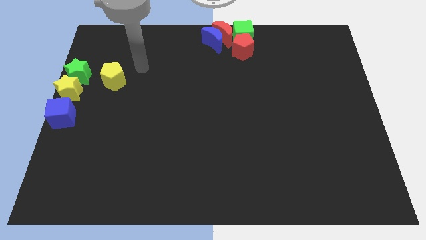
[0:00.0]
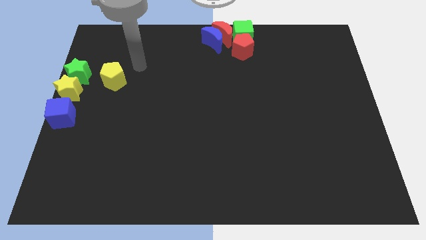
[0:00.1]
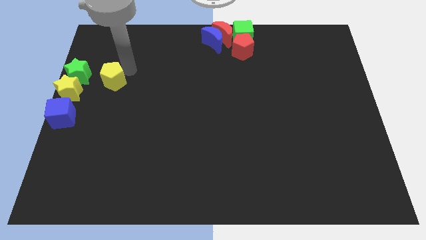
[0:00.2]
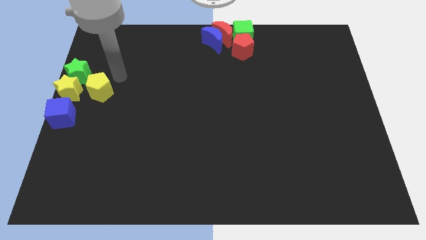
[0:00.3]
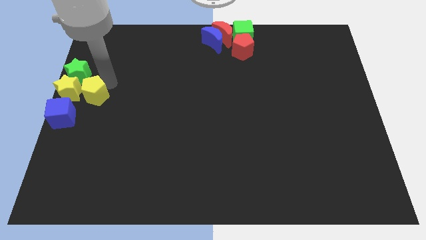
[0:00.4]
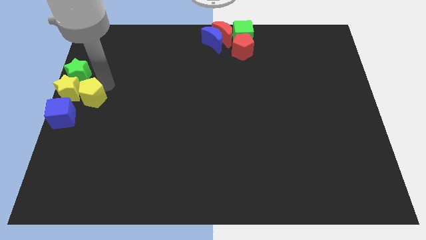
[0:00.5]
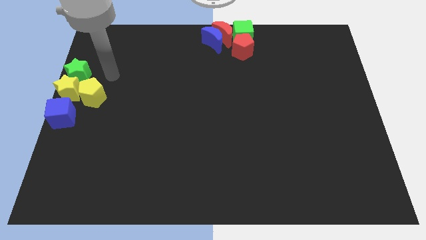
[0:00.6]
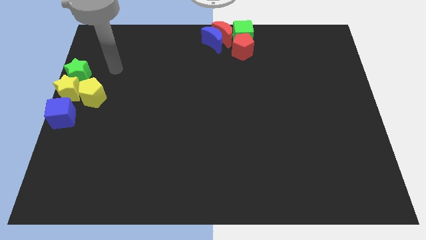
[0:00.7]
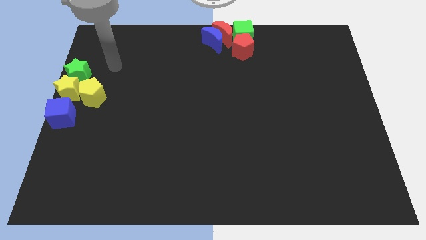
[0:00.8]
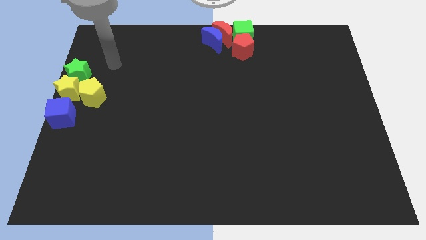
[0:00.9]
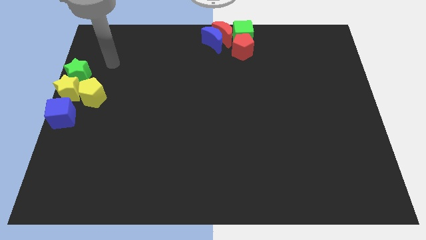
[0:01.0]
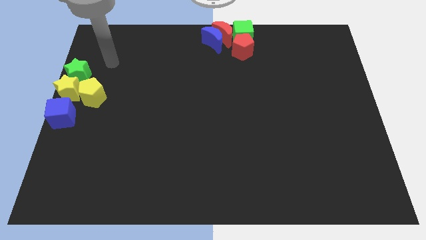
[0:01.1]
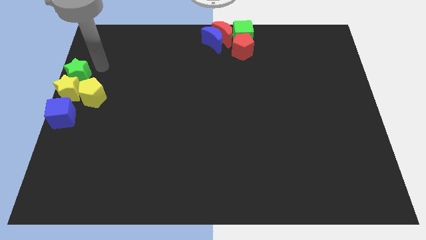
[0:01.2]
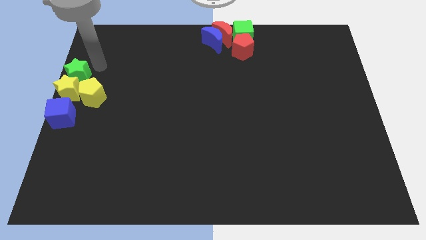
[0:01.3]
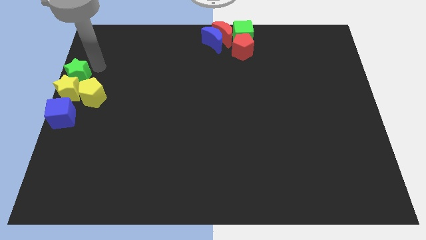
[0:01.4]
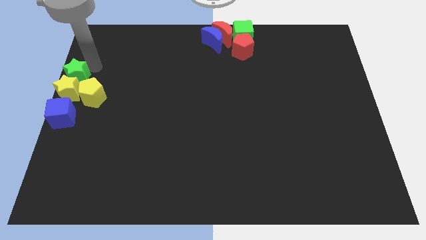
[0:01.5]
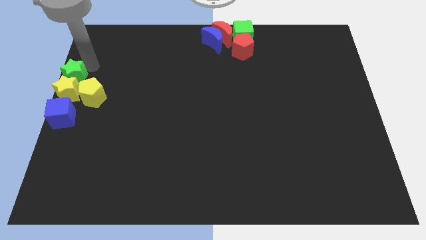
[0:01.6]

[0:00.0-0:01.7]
move the yellow pentagon right to the yellow star

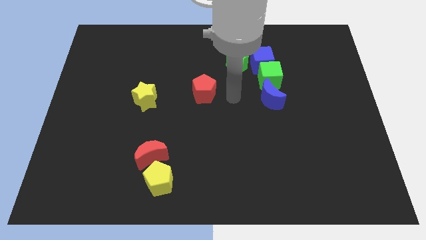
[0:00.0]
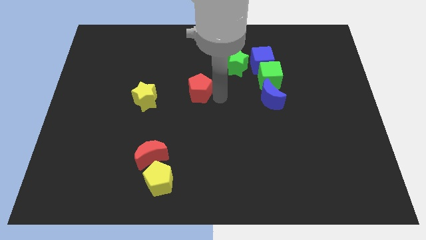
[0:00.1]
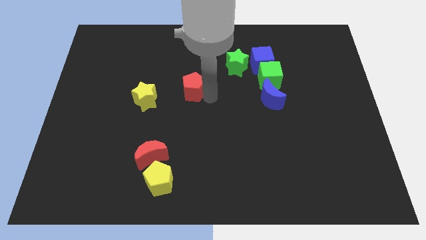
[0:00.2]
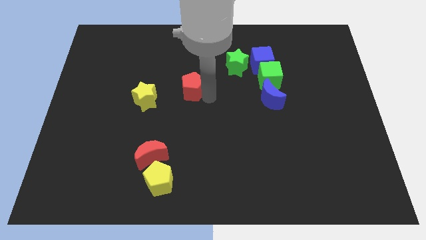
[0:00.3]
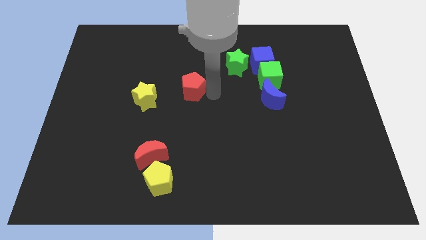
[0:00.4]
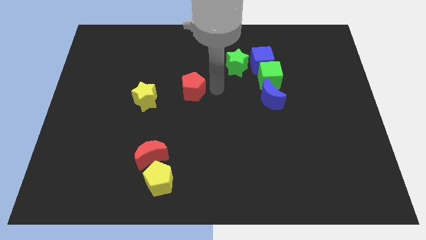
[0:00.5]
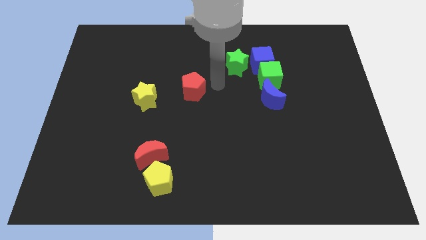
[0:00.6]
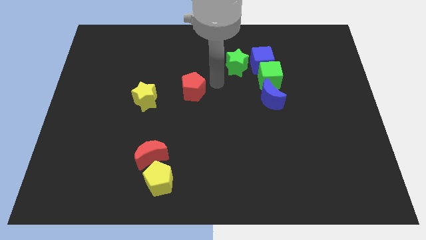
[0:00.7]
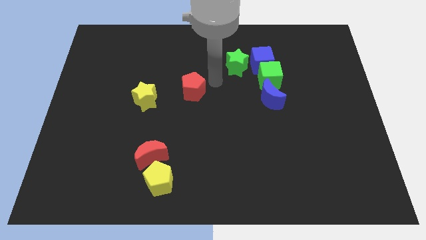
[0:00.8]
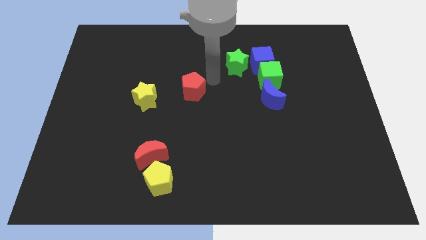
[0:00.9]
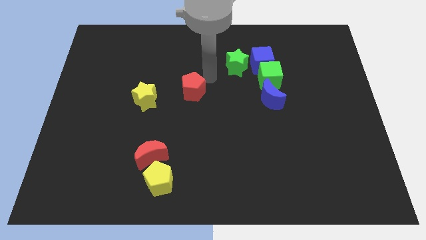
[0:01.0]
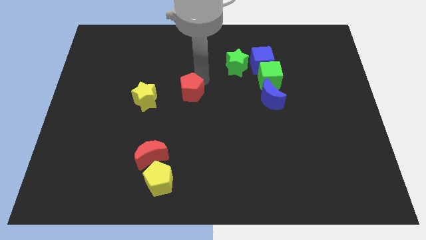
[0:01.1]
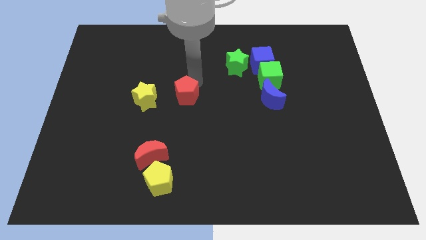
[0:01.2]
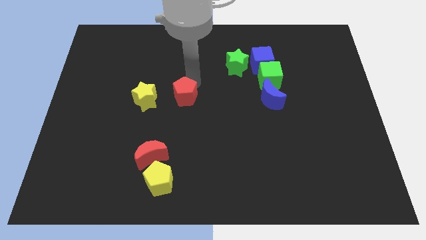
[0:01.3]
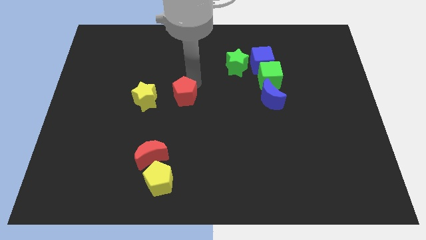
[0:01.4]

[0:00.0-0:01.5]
push the red pentagon to the right of the yellow star

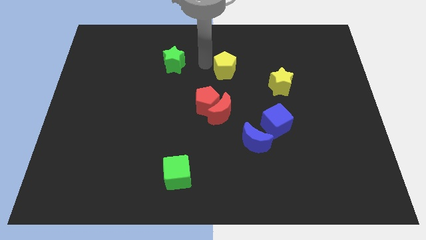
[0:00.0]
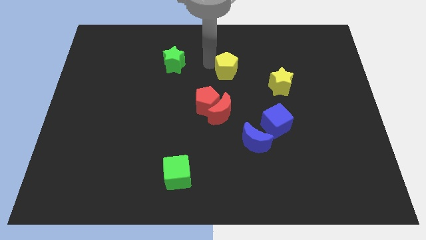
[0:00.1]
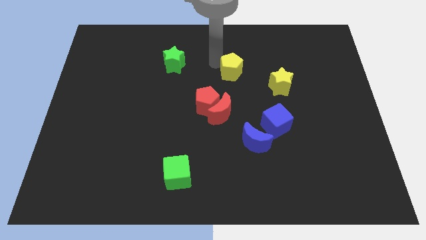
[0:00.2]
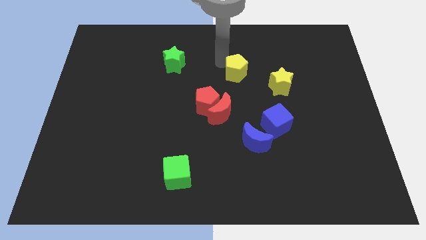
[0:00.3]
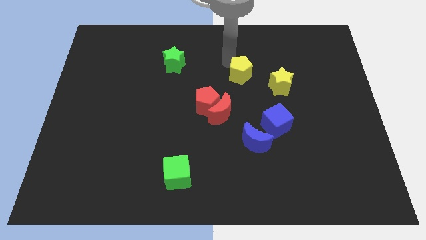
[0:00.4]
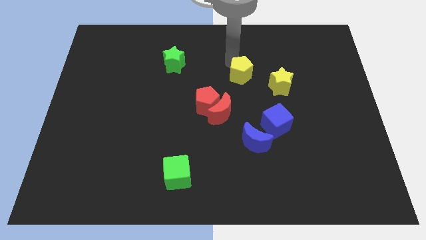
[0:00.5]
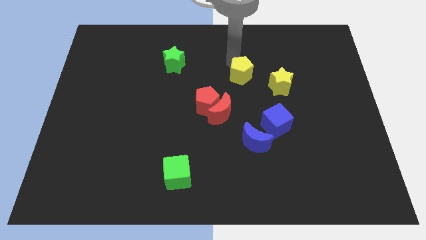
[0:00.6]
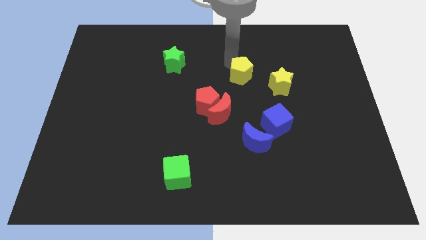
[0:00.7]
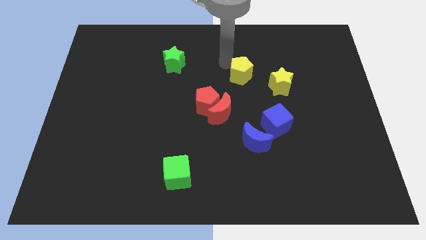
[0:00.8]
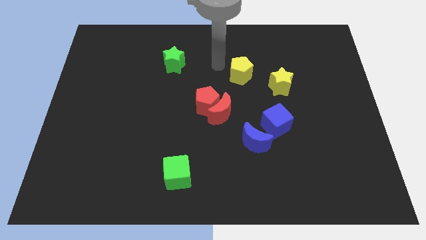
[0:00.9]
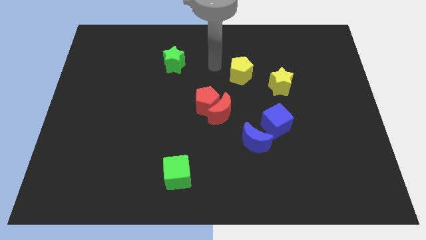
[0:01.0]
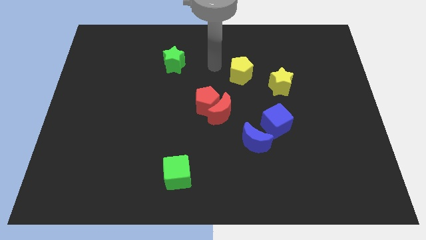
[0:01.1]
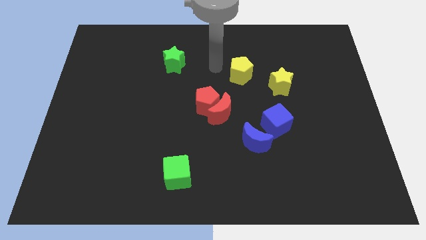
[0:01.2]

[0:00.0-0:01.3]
move the yellow pentagon diagonal to the top right of the red crescent

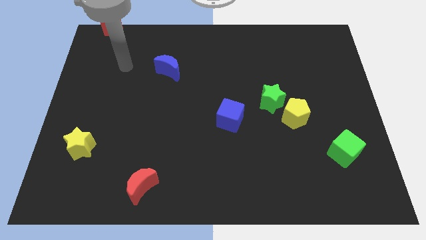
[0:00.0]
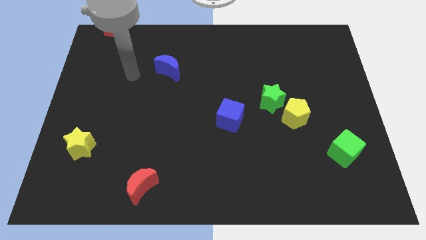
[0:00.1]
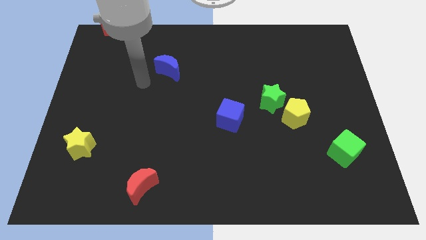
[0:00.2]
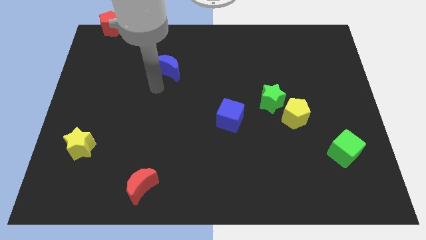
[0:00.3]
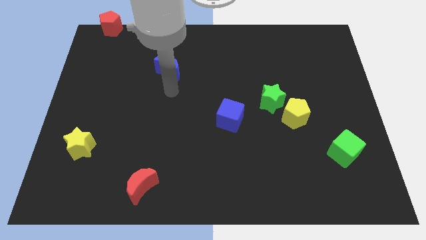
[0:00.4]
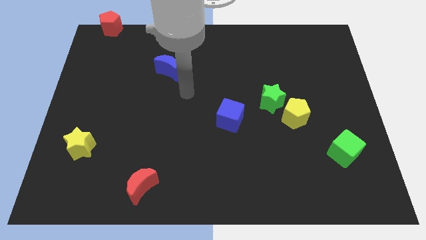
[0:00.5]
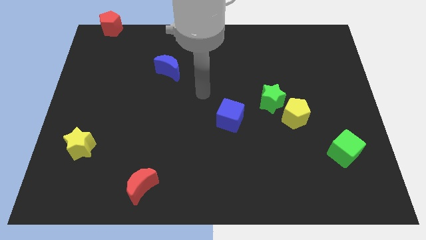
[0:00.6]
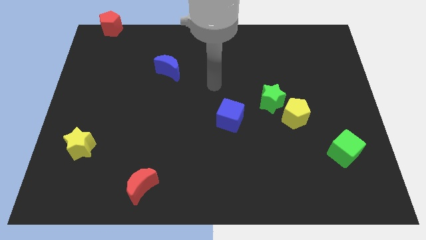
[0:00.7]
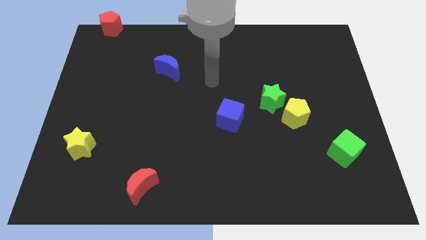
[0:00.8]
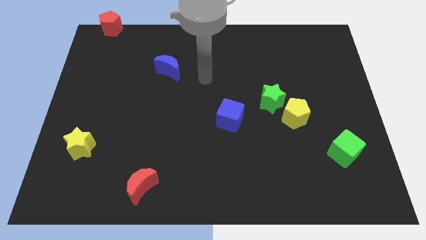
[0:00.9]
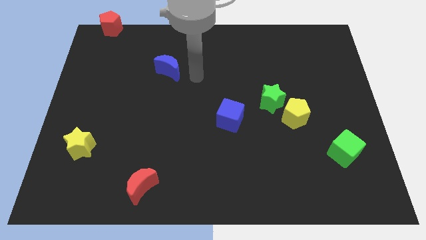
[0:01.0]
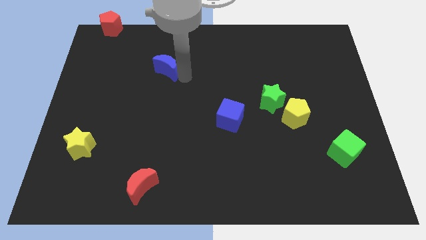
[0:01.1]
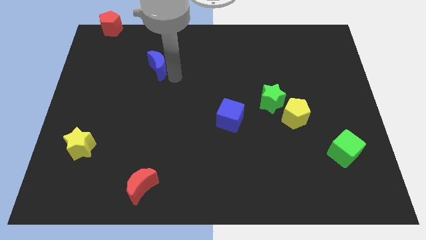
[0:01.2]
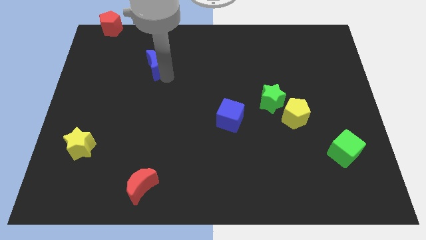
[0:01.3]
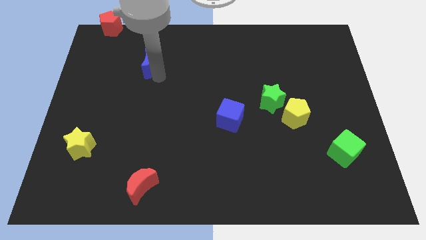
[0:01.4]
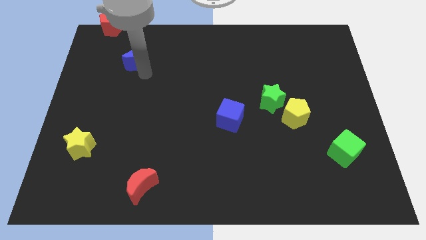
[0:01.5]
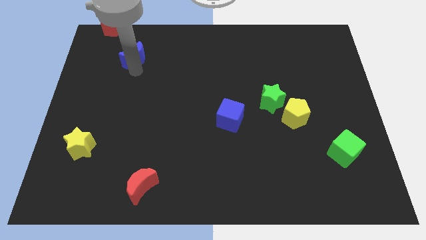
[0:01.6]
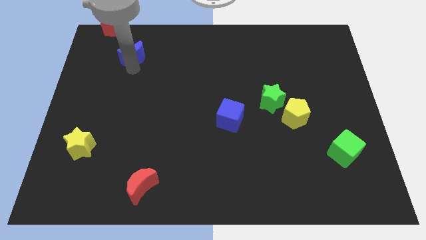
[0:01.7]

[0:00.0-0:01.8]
drag the blue moon towards the red pentagon

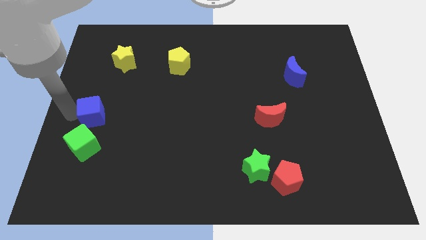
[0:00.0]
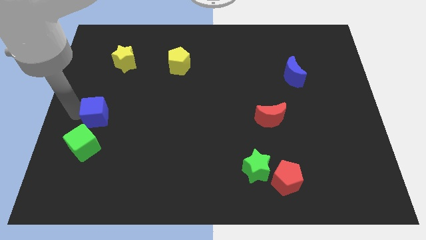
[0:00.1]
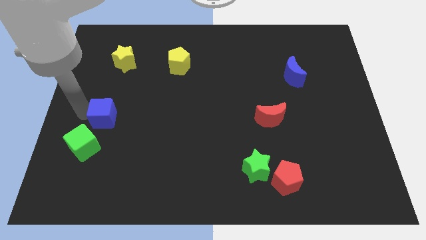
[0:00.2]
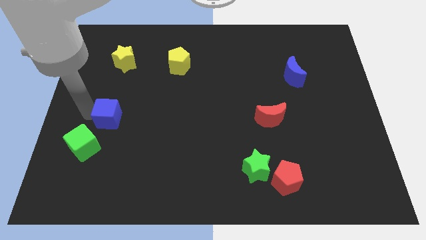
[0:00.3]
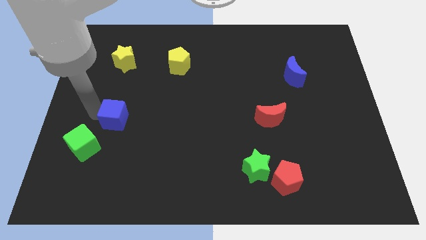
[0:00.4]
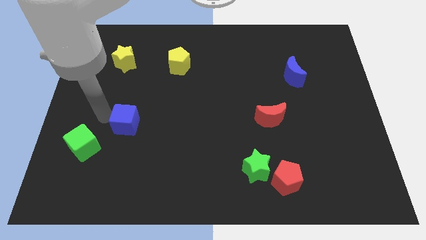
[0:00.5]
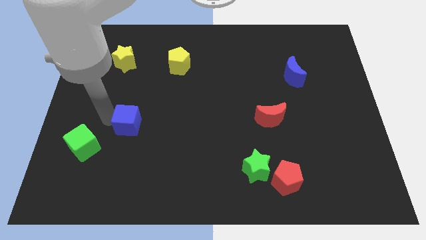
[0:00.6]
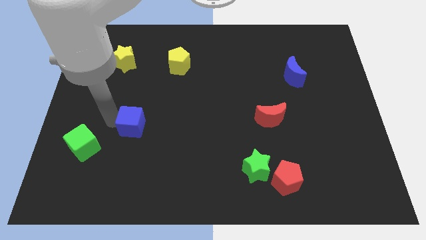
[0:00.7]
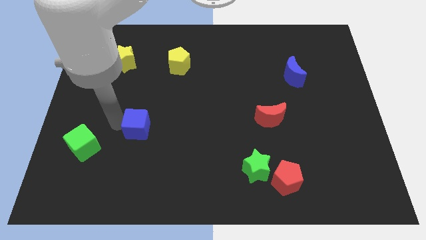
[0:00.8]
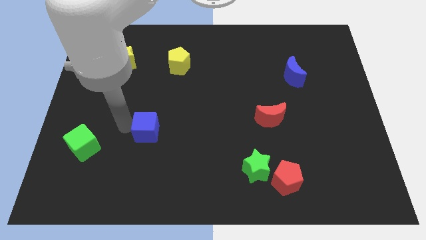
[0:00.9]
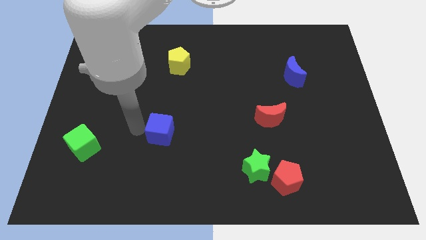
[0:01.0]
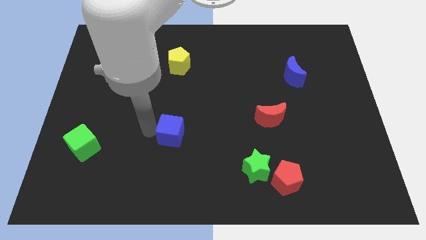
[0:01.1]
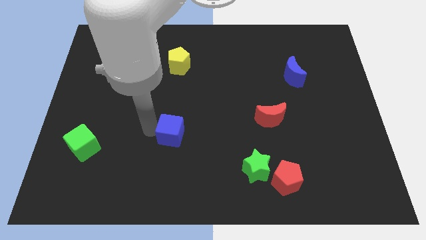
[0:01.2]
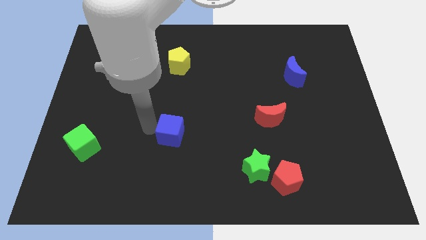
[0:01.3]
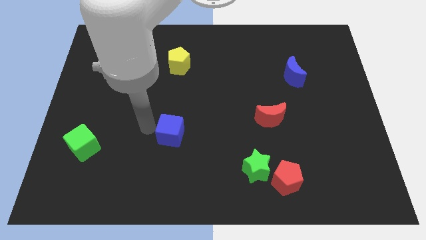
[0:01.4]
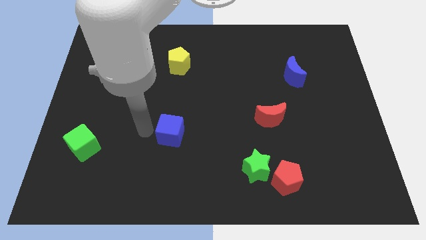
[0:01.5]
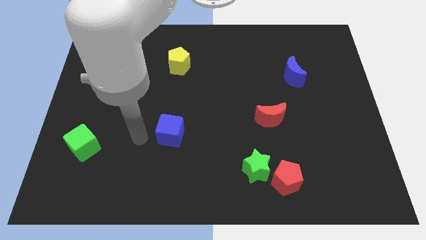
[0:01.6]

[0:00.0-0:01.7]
separate blue cube from the green cube

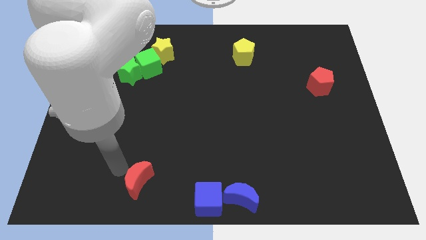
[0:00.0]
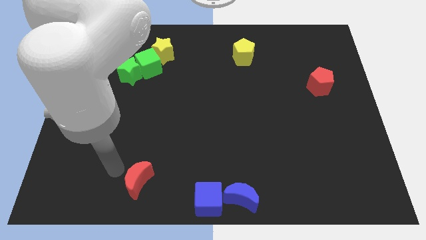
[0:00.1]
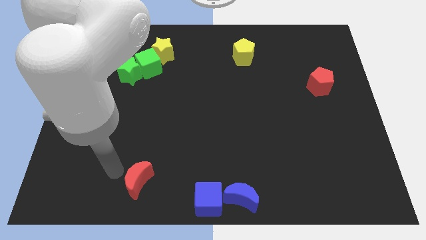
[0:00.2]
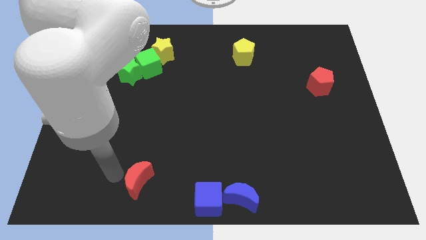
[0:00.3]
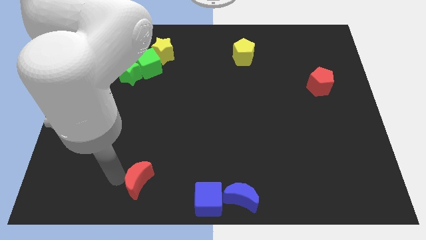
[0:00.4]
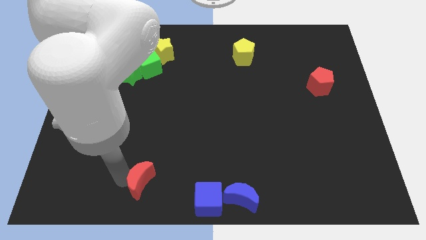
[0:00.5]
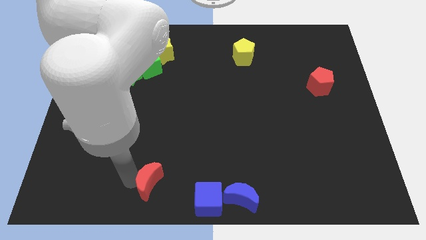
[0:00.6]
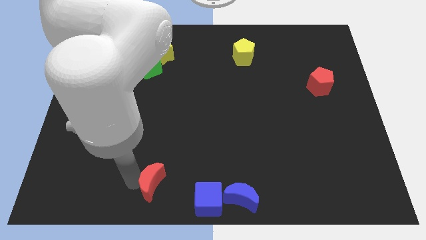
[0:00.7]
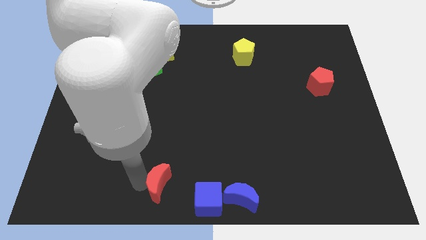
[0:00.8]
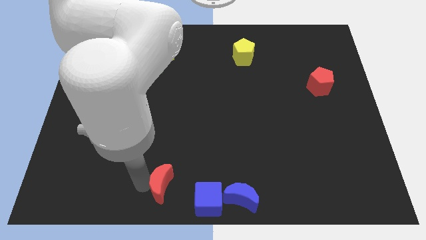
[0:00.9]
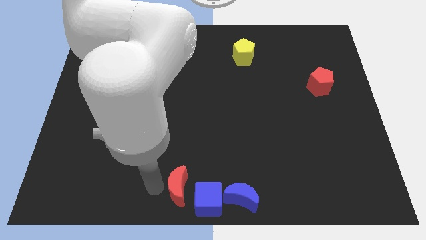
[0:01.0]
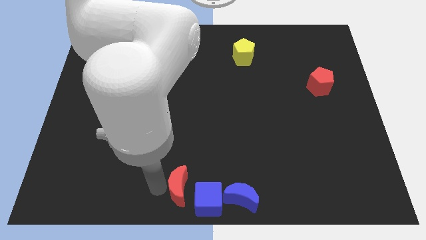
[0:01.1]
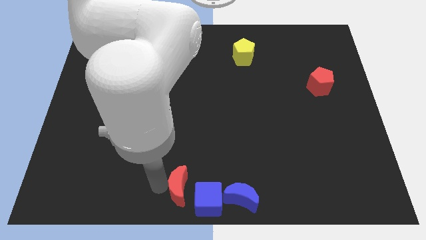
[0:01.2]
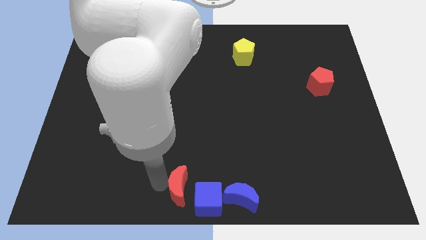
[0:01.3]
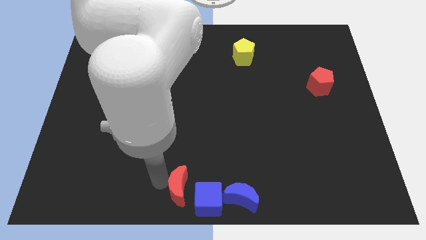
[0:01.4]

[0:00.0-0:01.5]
push the red crescent slightly right of the board
